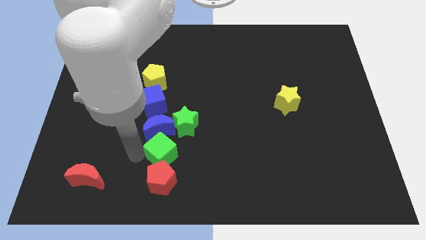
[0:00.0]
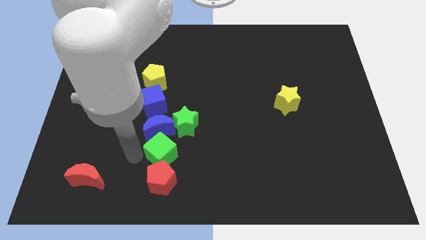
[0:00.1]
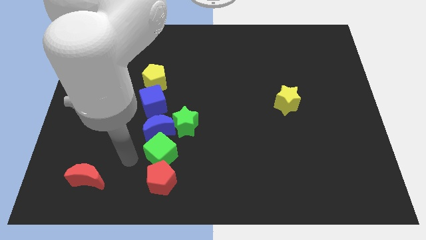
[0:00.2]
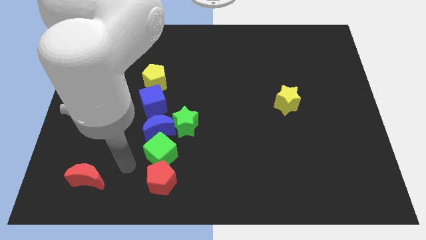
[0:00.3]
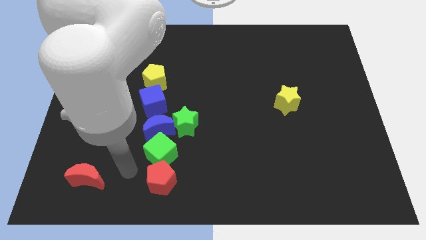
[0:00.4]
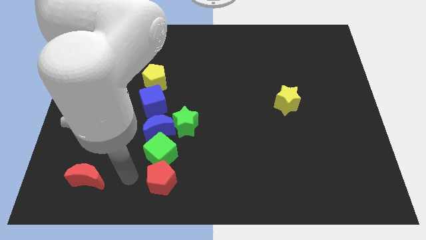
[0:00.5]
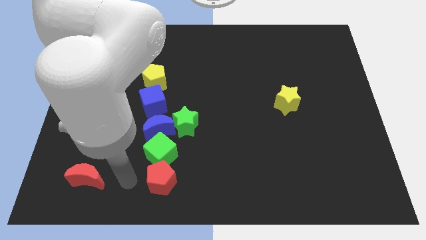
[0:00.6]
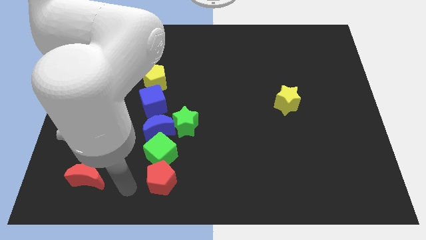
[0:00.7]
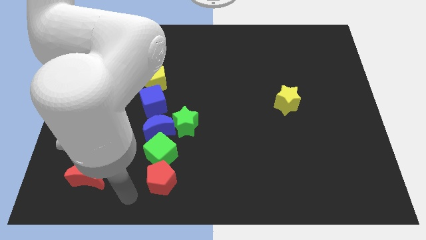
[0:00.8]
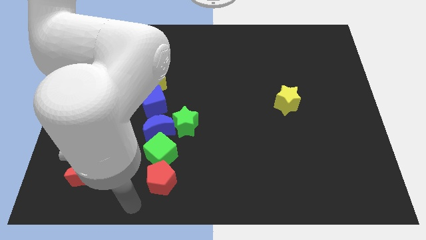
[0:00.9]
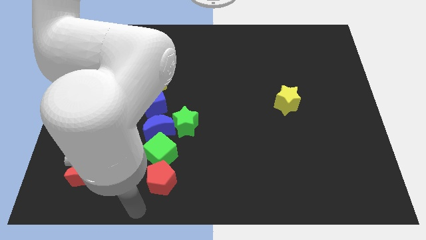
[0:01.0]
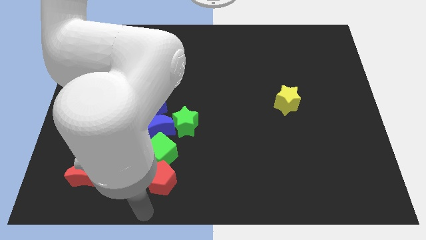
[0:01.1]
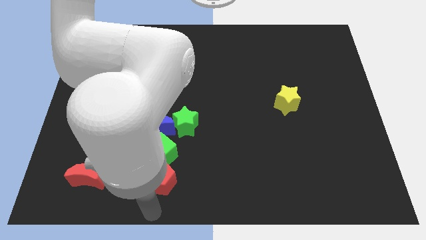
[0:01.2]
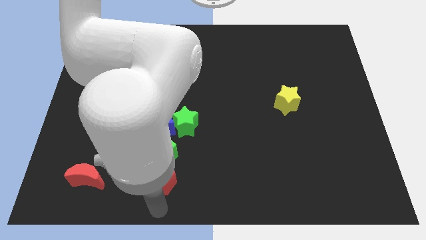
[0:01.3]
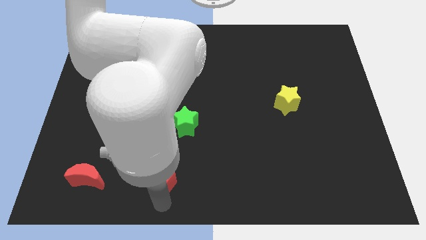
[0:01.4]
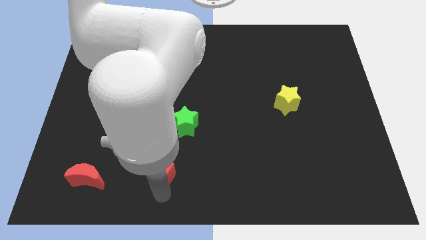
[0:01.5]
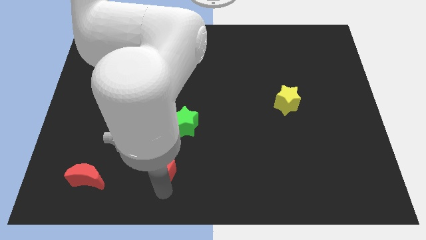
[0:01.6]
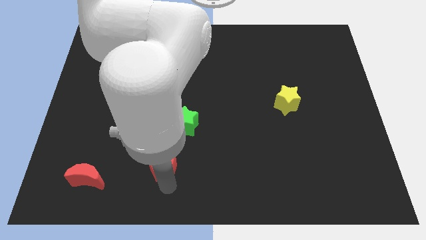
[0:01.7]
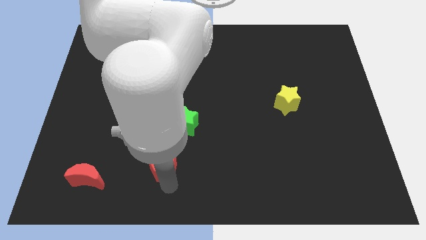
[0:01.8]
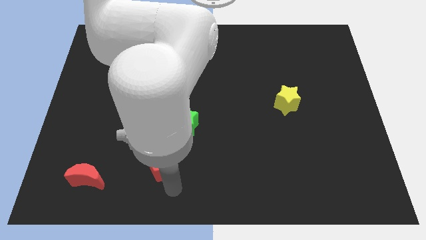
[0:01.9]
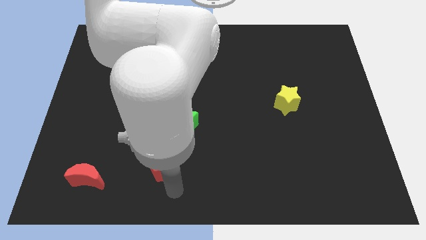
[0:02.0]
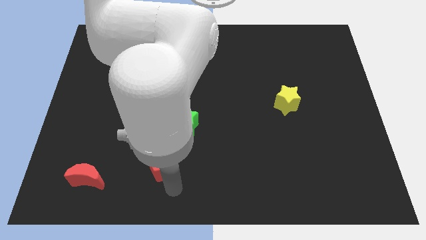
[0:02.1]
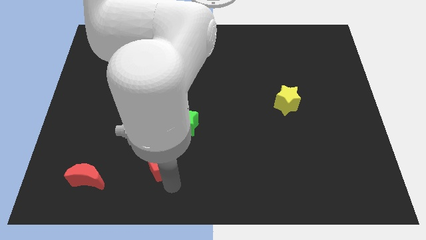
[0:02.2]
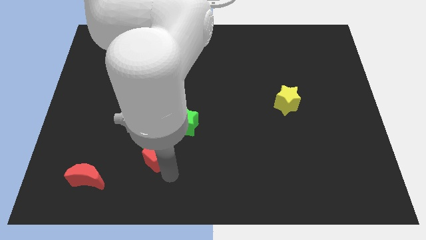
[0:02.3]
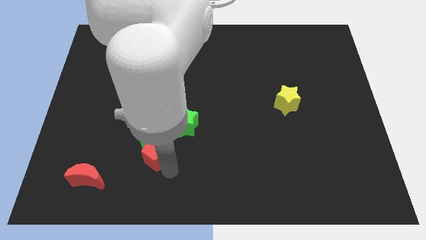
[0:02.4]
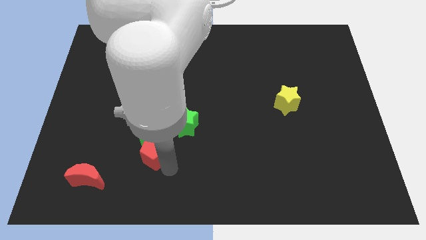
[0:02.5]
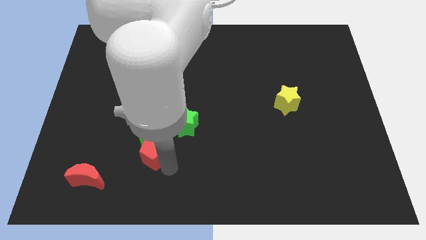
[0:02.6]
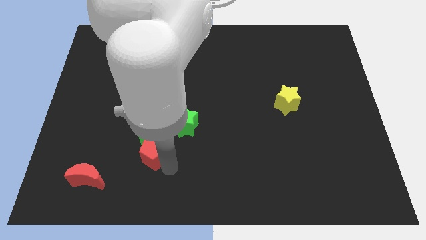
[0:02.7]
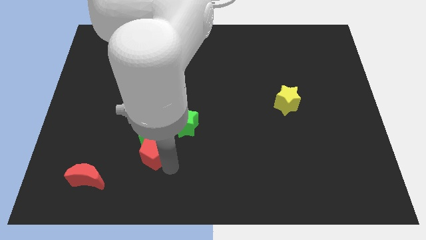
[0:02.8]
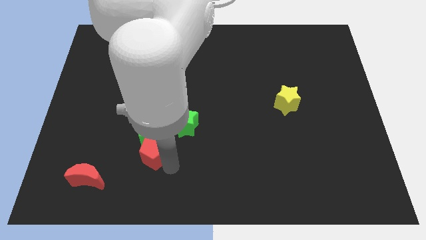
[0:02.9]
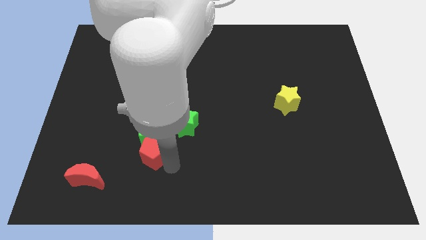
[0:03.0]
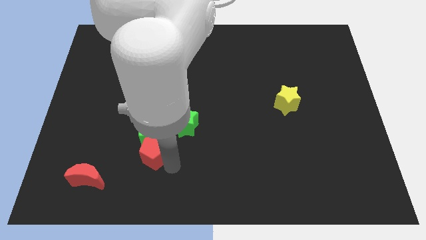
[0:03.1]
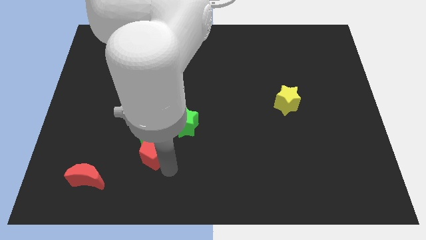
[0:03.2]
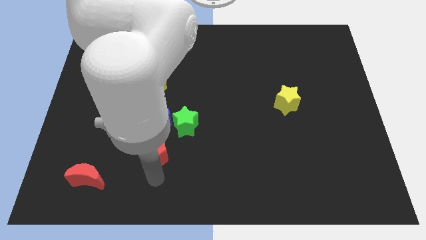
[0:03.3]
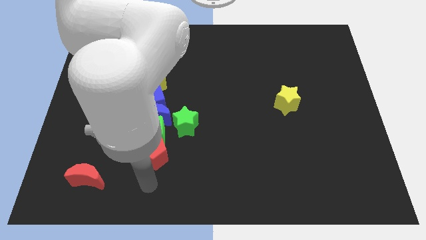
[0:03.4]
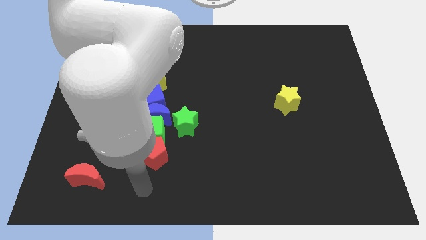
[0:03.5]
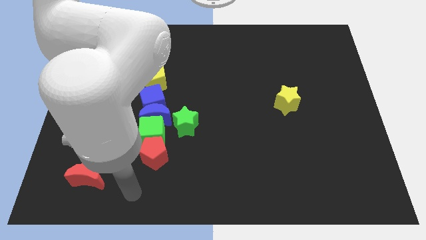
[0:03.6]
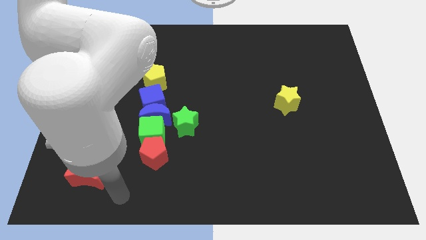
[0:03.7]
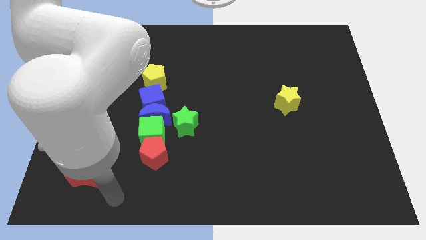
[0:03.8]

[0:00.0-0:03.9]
move the red pentagon into the green cube

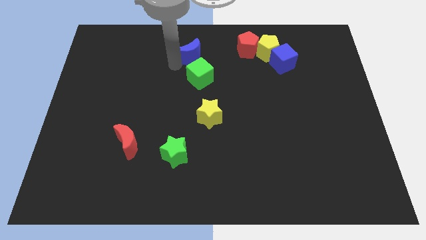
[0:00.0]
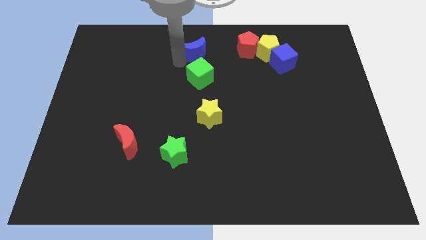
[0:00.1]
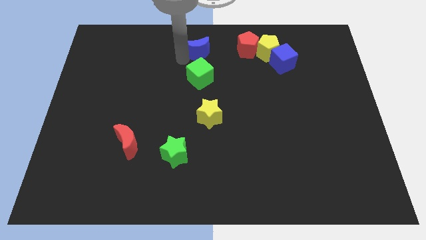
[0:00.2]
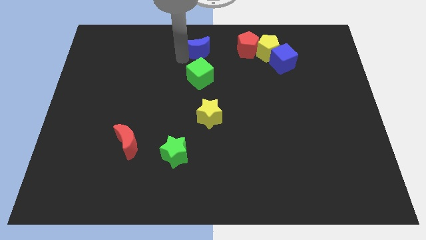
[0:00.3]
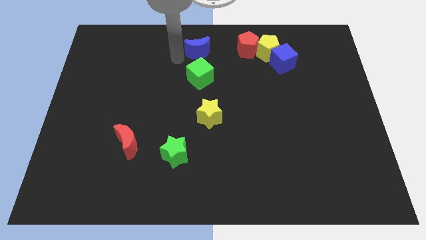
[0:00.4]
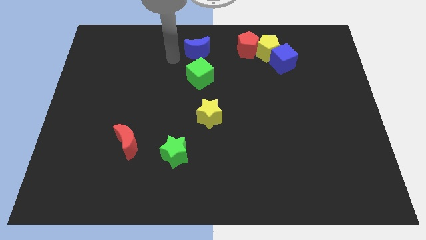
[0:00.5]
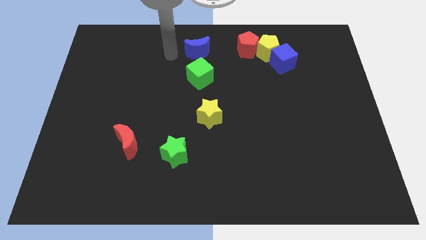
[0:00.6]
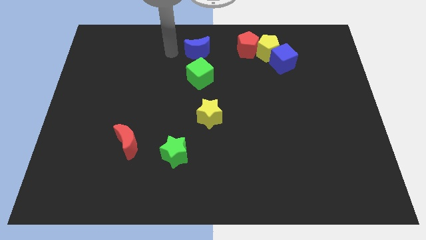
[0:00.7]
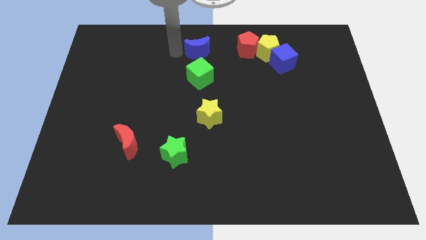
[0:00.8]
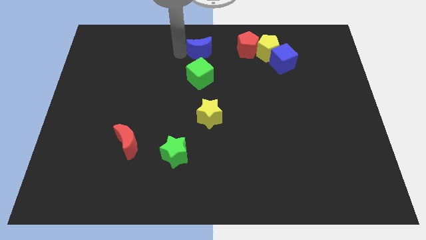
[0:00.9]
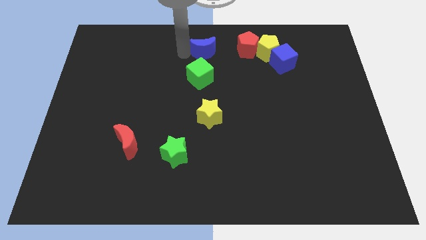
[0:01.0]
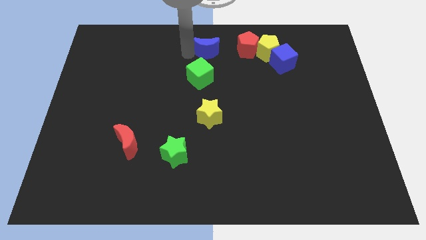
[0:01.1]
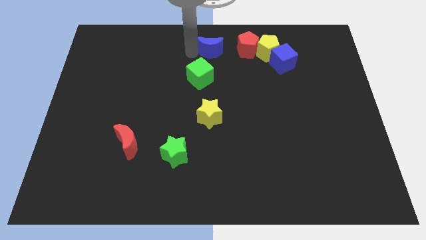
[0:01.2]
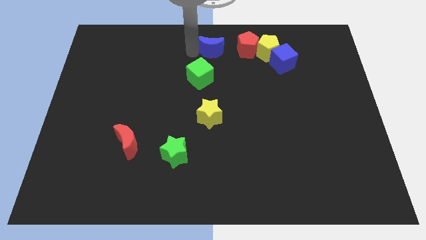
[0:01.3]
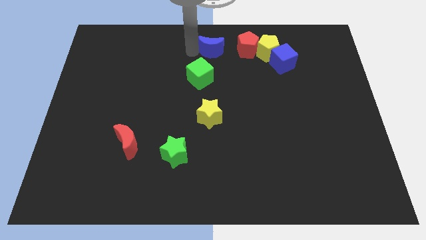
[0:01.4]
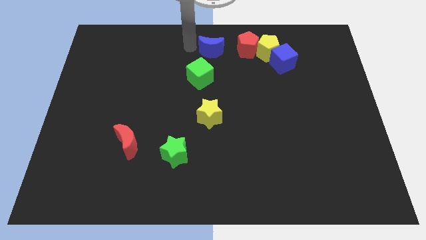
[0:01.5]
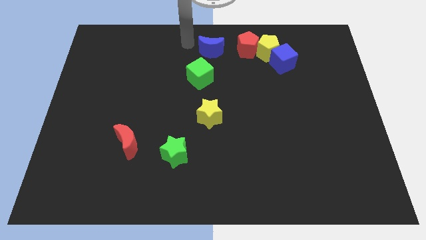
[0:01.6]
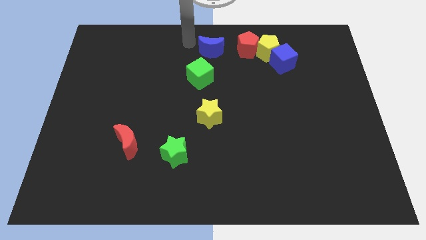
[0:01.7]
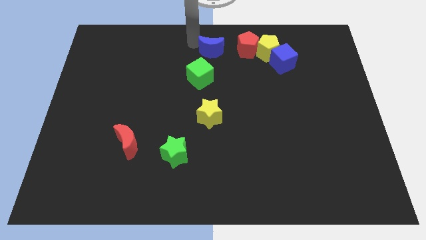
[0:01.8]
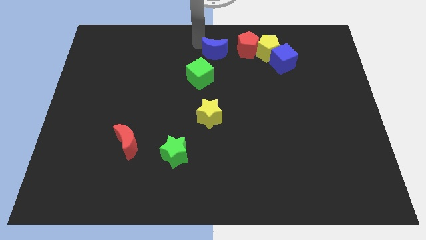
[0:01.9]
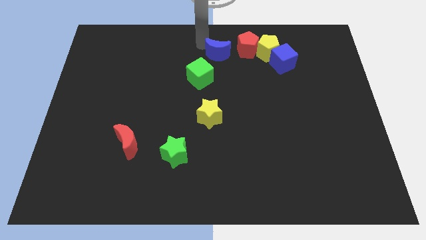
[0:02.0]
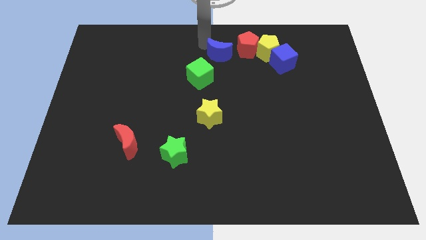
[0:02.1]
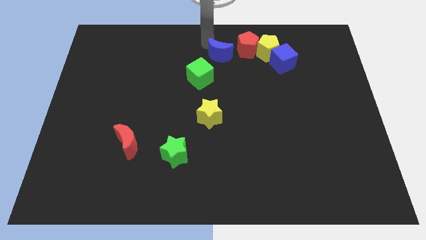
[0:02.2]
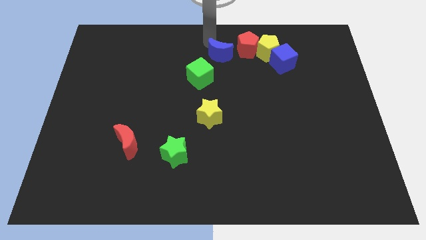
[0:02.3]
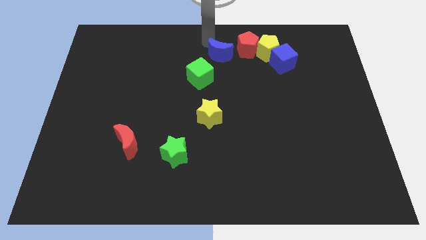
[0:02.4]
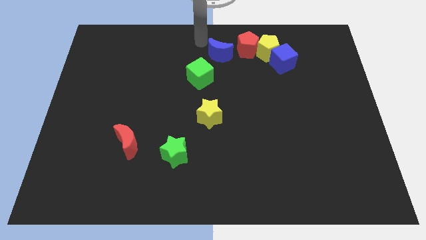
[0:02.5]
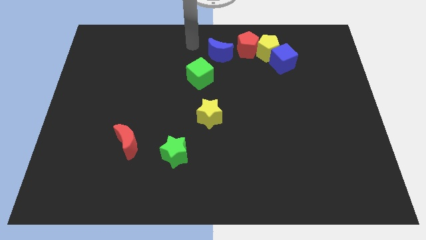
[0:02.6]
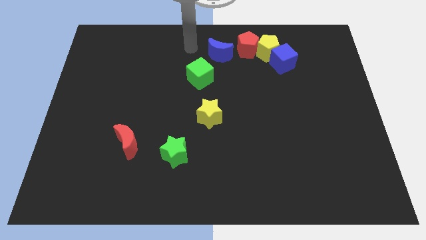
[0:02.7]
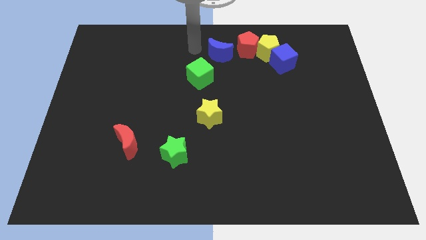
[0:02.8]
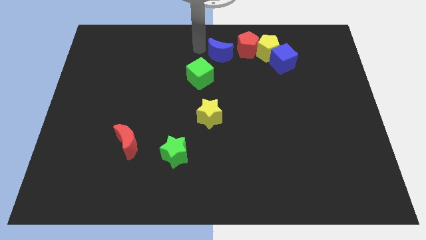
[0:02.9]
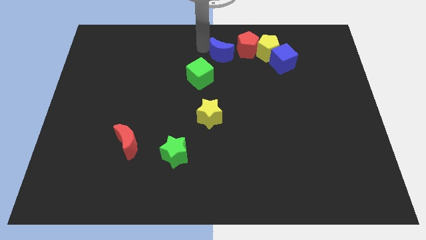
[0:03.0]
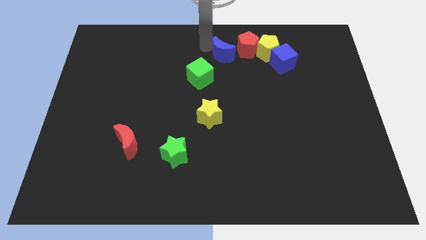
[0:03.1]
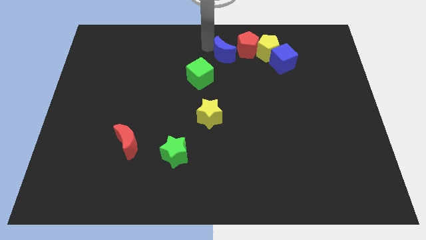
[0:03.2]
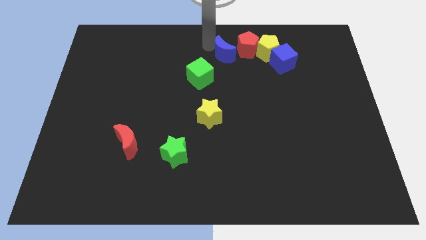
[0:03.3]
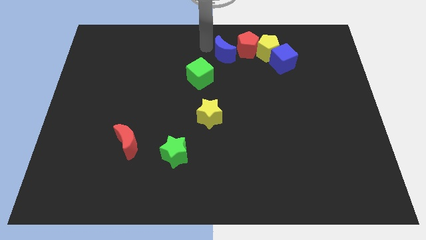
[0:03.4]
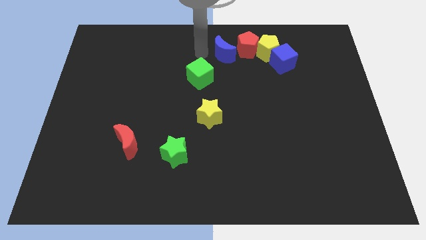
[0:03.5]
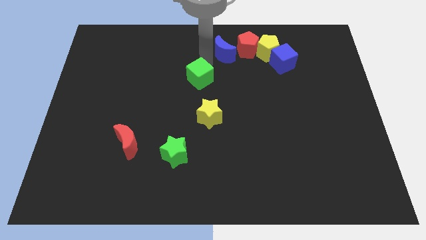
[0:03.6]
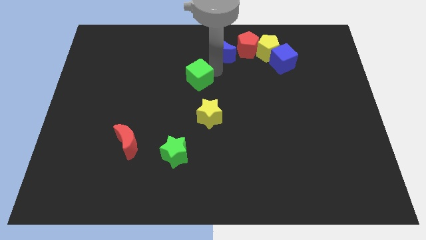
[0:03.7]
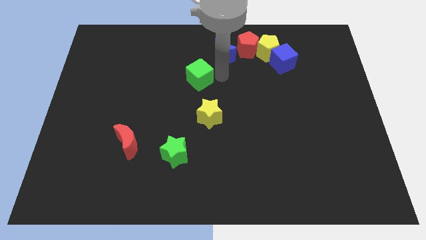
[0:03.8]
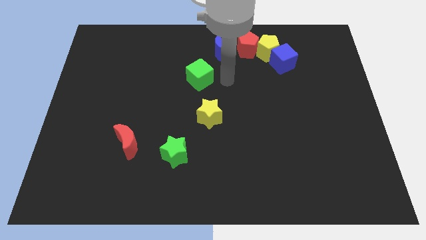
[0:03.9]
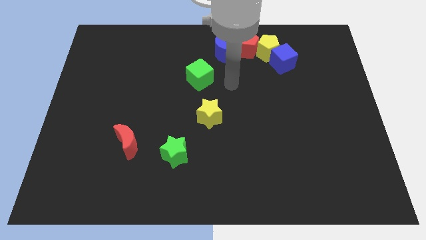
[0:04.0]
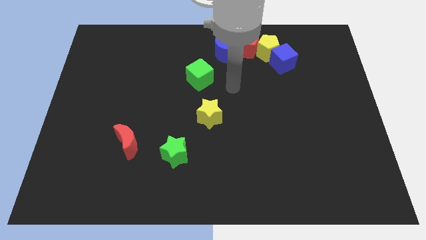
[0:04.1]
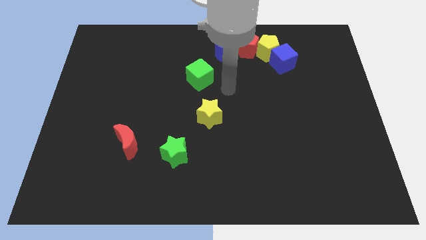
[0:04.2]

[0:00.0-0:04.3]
move the blue moon to the left of the red pentagon

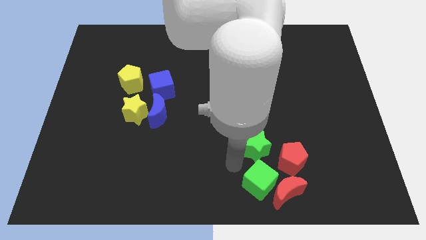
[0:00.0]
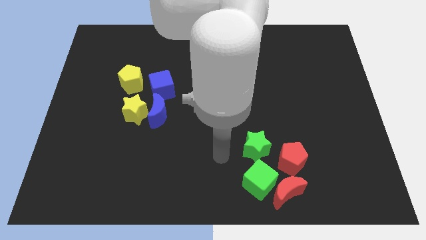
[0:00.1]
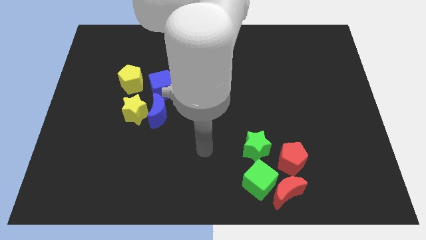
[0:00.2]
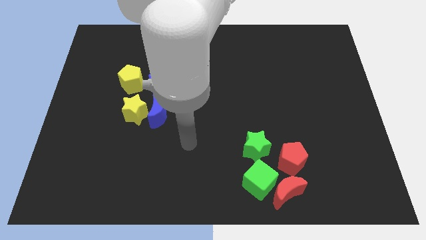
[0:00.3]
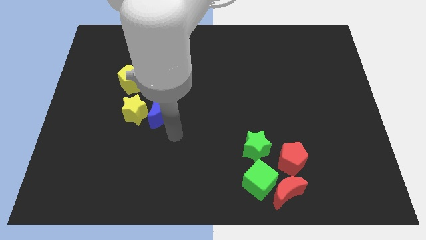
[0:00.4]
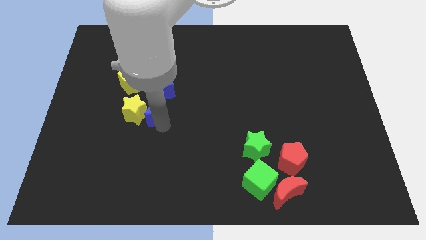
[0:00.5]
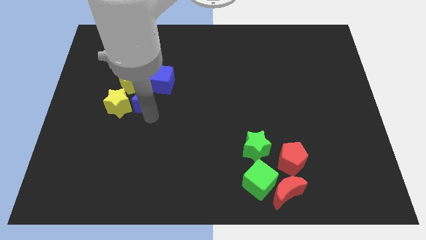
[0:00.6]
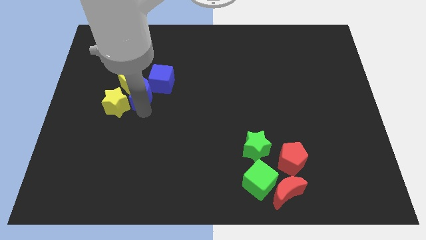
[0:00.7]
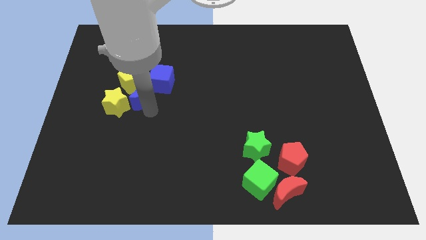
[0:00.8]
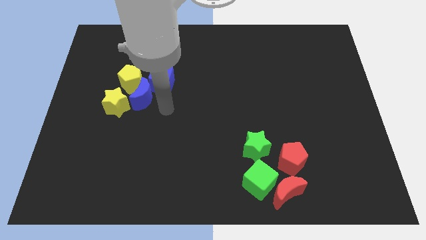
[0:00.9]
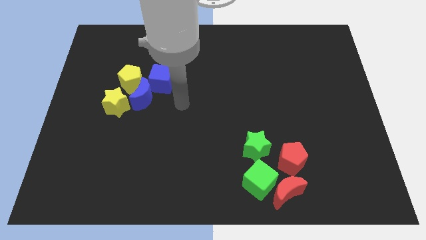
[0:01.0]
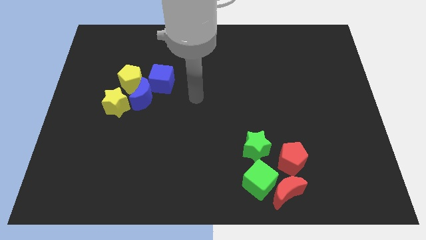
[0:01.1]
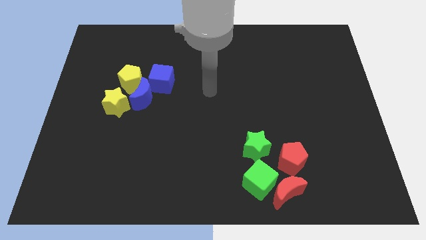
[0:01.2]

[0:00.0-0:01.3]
push the blue blocks into yellow blocks
